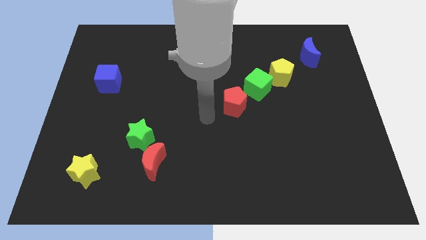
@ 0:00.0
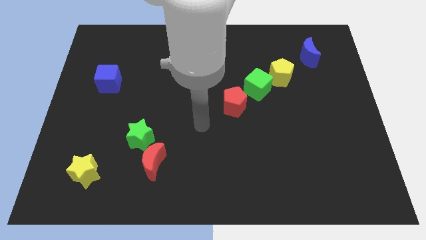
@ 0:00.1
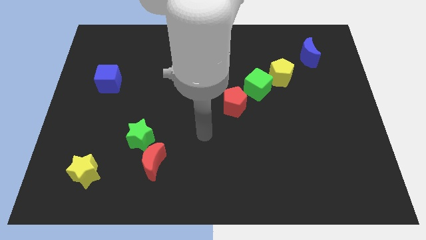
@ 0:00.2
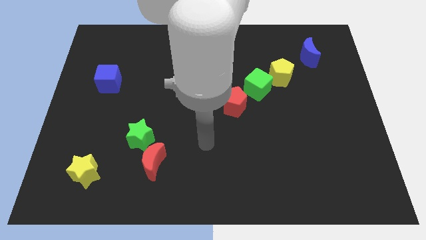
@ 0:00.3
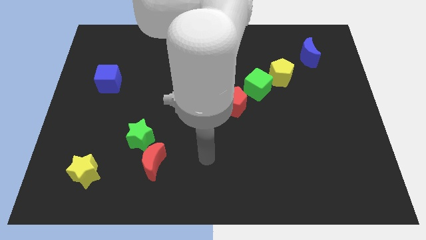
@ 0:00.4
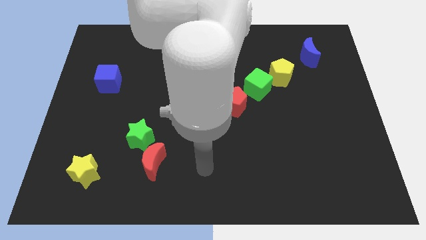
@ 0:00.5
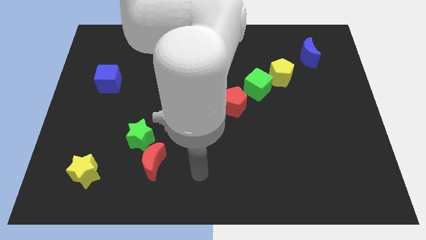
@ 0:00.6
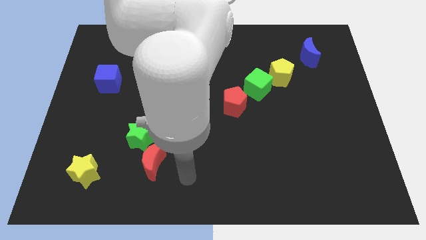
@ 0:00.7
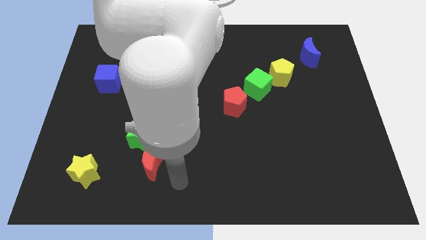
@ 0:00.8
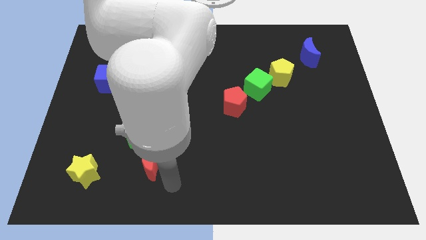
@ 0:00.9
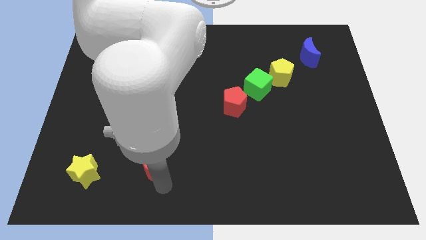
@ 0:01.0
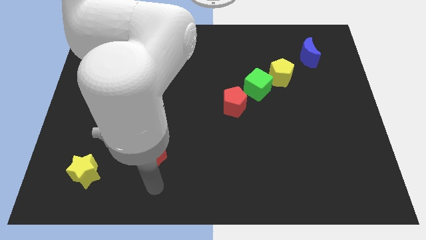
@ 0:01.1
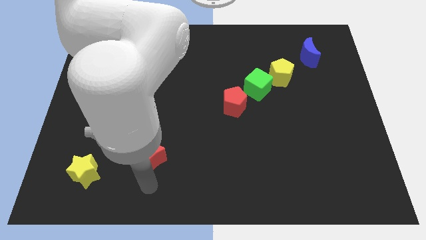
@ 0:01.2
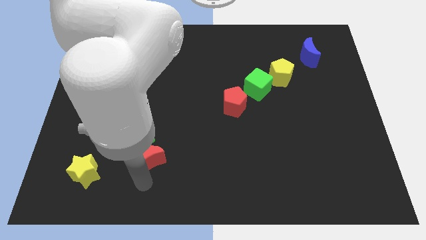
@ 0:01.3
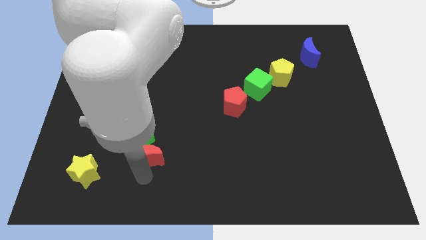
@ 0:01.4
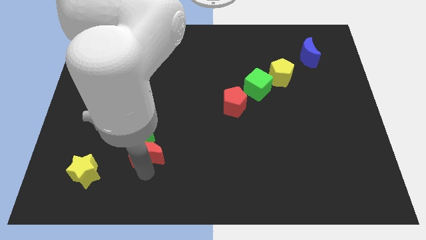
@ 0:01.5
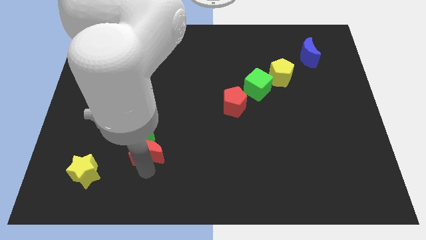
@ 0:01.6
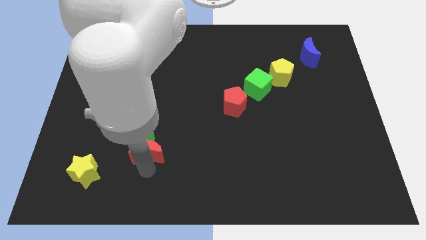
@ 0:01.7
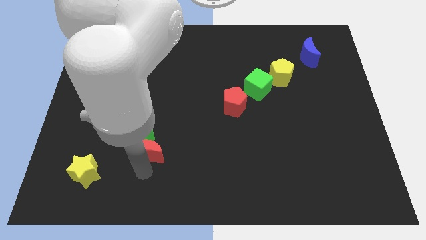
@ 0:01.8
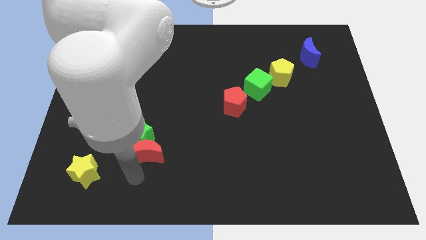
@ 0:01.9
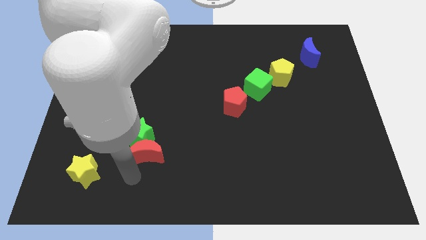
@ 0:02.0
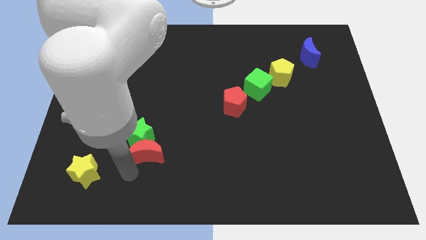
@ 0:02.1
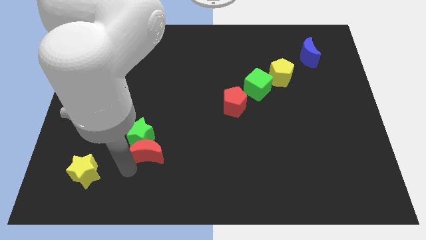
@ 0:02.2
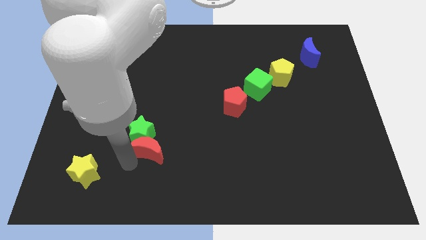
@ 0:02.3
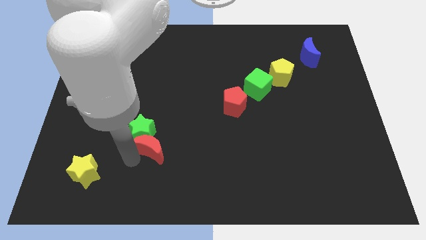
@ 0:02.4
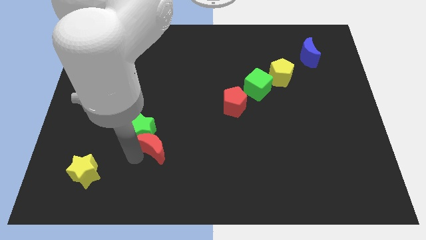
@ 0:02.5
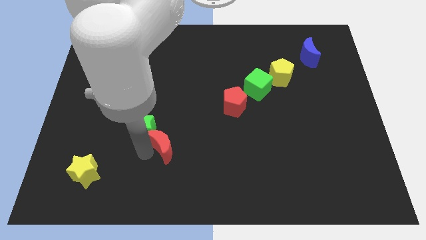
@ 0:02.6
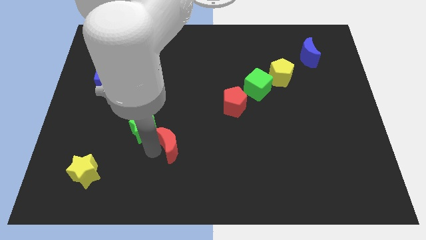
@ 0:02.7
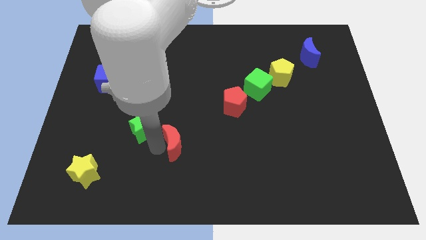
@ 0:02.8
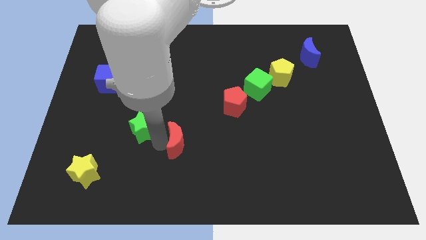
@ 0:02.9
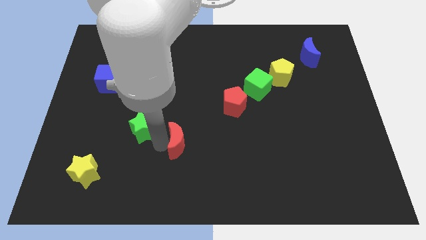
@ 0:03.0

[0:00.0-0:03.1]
separate the red moon from the green star

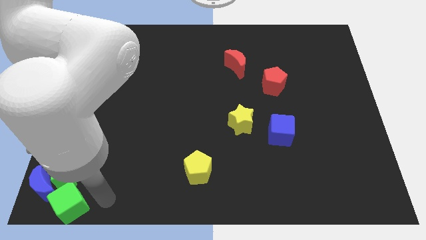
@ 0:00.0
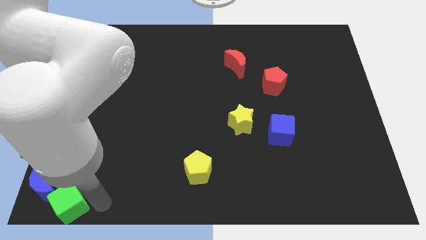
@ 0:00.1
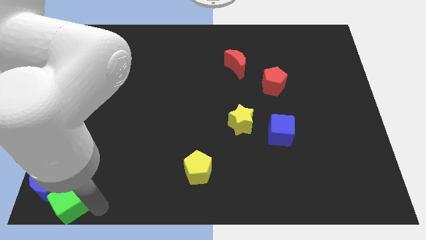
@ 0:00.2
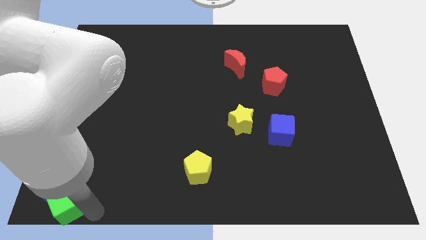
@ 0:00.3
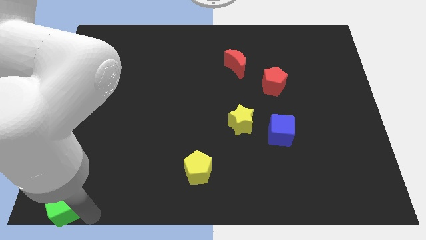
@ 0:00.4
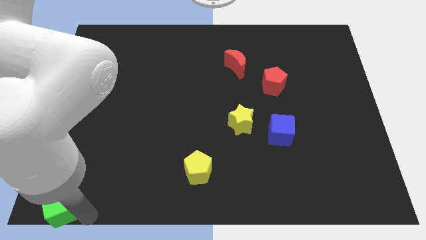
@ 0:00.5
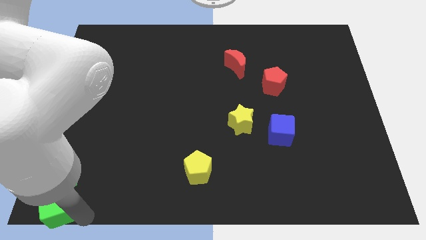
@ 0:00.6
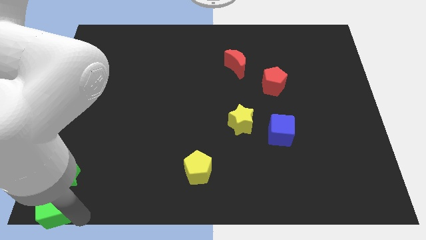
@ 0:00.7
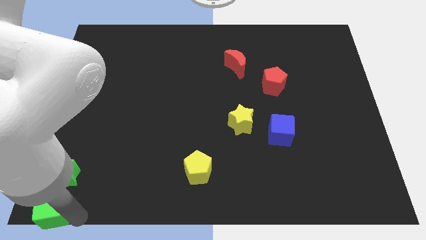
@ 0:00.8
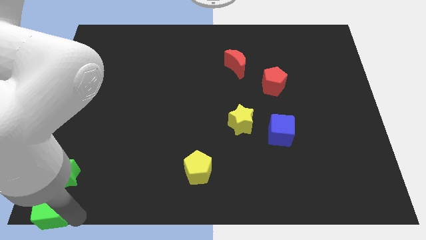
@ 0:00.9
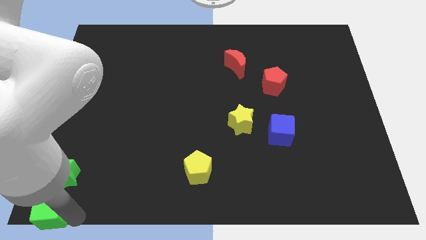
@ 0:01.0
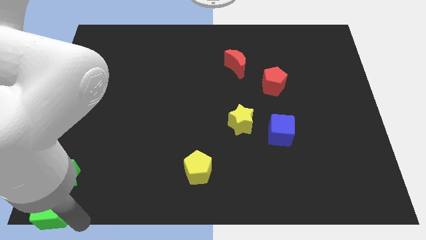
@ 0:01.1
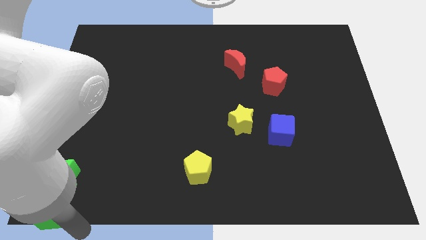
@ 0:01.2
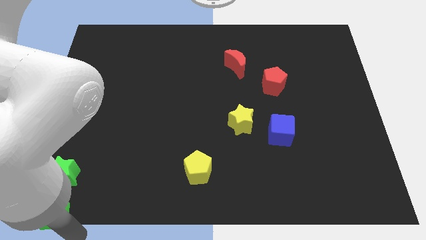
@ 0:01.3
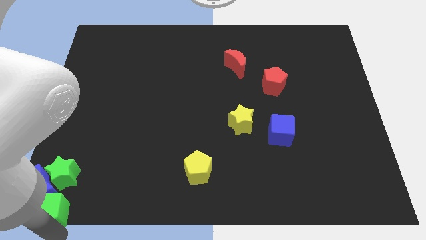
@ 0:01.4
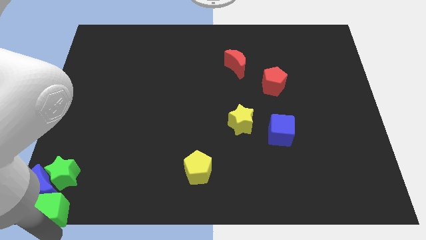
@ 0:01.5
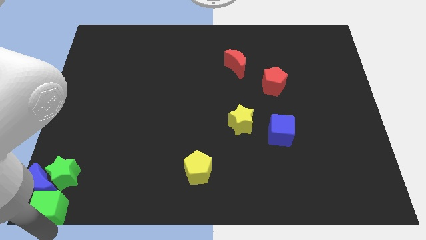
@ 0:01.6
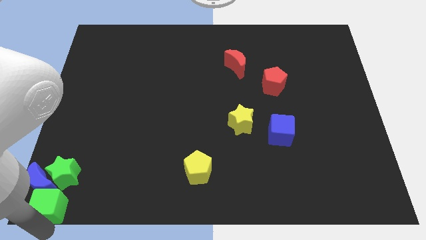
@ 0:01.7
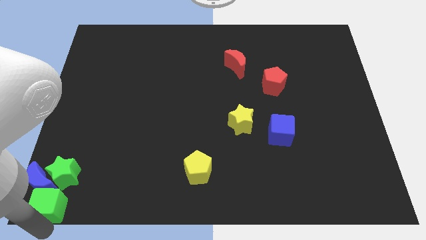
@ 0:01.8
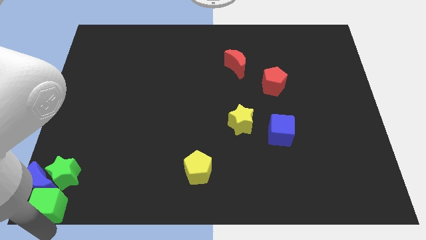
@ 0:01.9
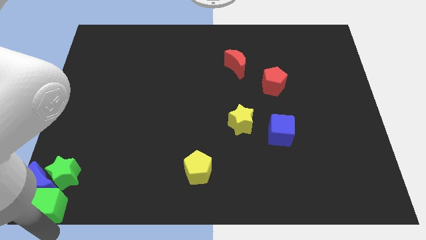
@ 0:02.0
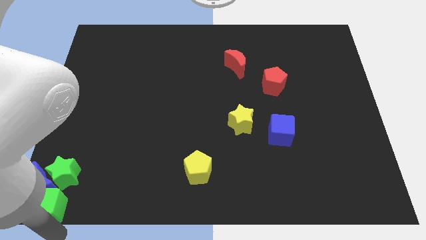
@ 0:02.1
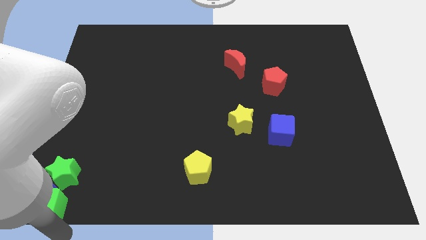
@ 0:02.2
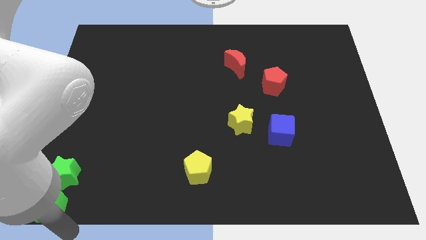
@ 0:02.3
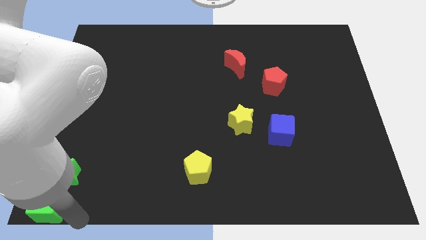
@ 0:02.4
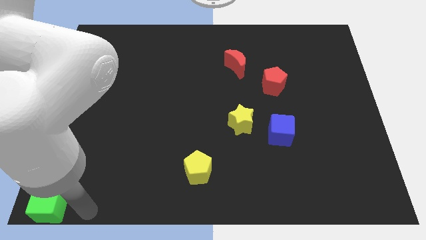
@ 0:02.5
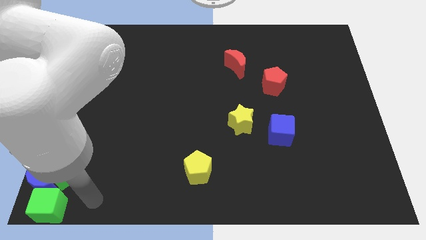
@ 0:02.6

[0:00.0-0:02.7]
put the green cube at the bottom left corner of the board

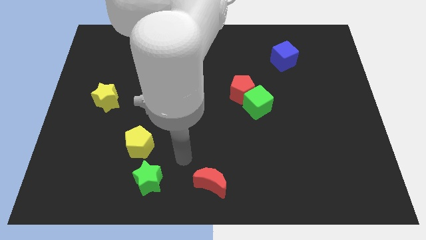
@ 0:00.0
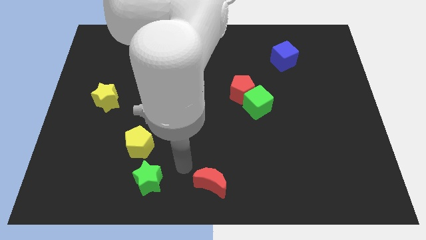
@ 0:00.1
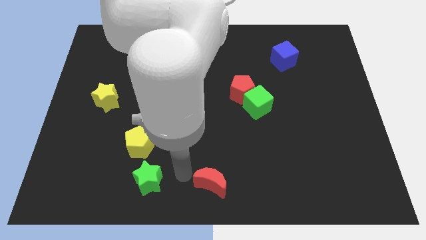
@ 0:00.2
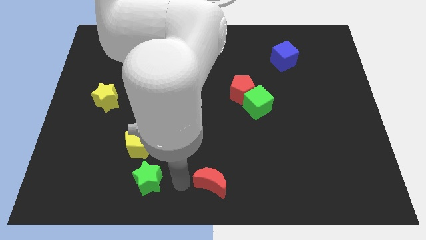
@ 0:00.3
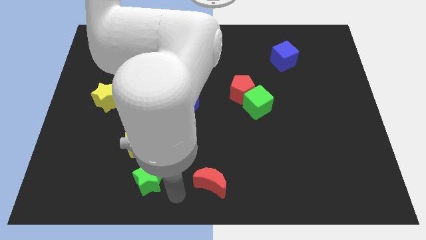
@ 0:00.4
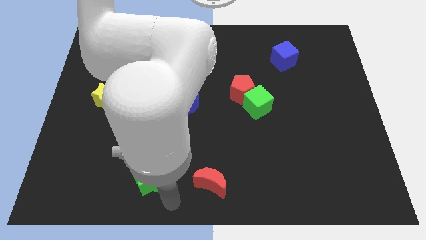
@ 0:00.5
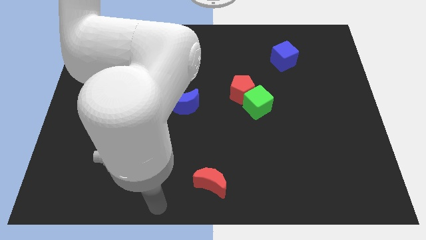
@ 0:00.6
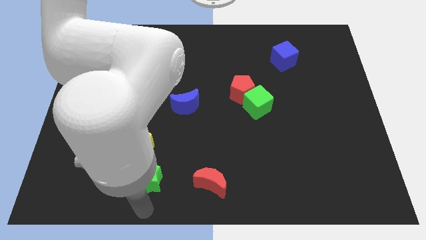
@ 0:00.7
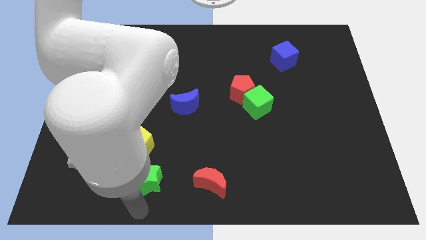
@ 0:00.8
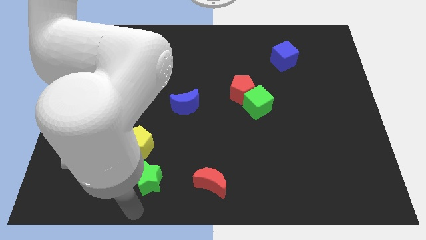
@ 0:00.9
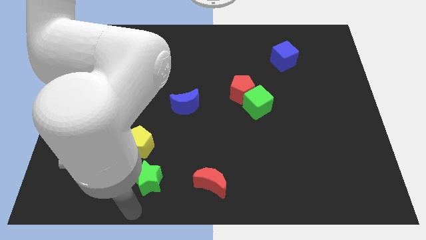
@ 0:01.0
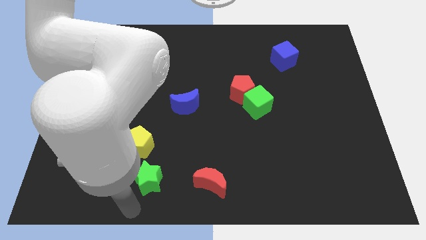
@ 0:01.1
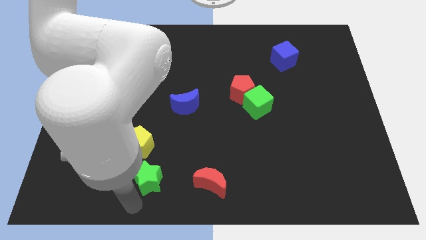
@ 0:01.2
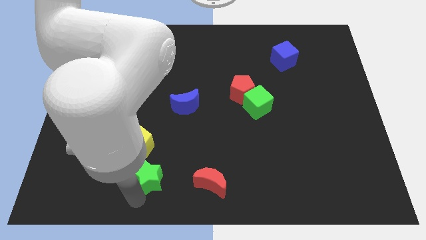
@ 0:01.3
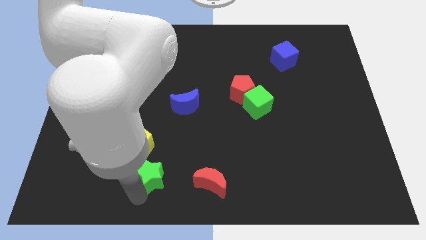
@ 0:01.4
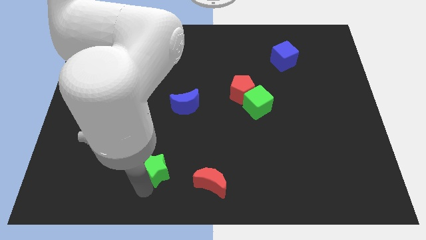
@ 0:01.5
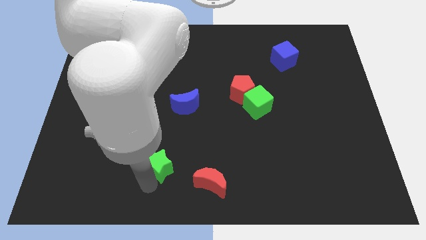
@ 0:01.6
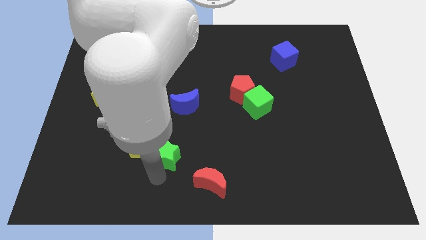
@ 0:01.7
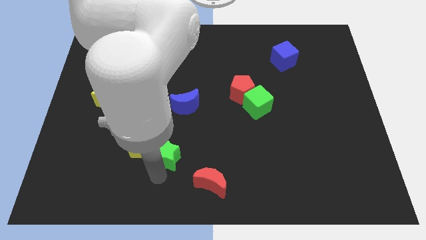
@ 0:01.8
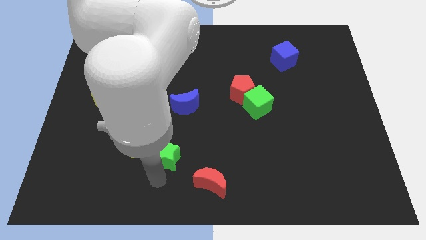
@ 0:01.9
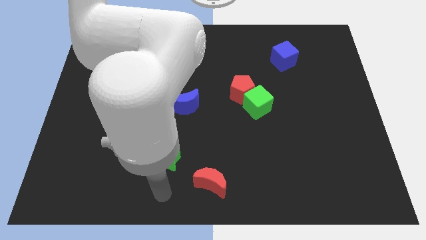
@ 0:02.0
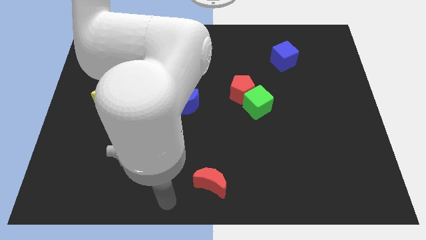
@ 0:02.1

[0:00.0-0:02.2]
move the green star slightly to the top

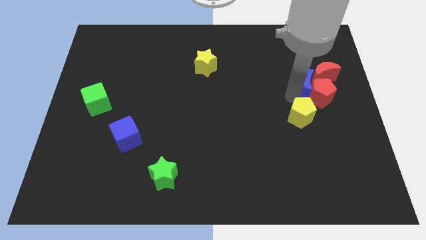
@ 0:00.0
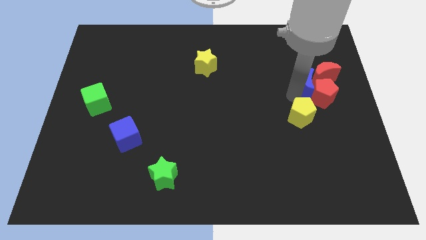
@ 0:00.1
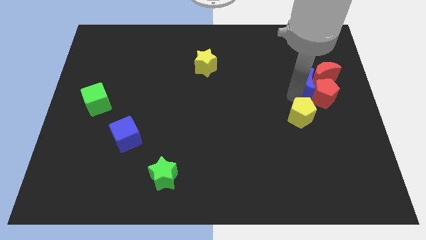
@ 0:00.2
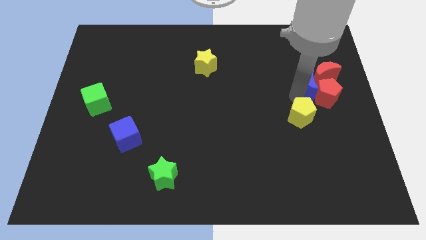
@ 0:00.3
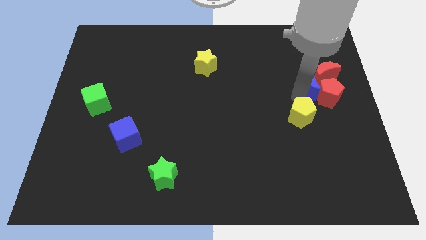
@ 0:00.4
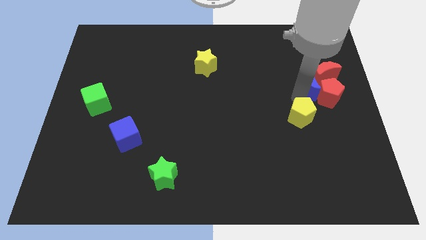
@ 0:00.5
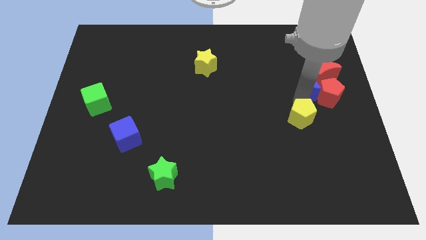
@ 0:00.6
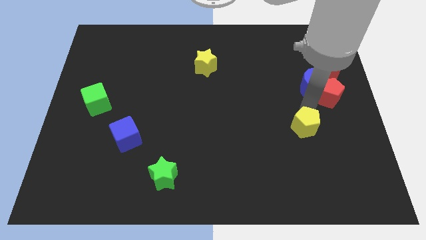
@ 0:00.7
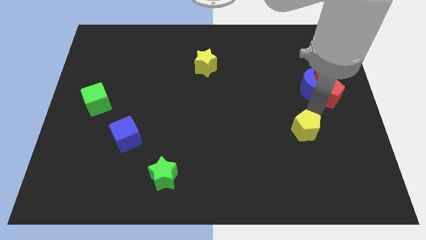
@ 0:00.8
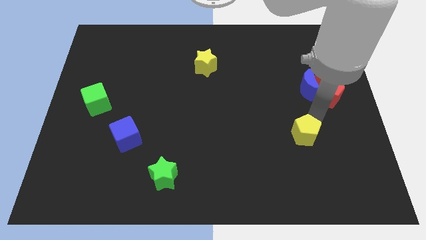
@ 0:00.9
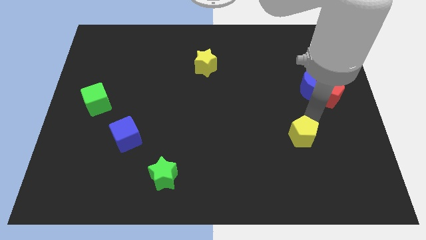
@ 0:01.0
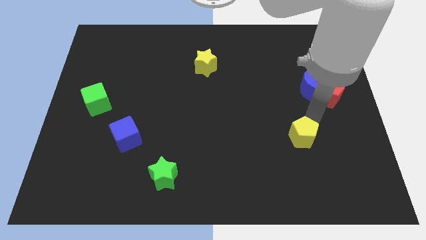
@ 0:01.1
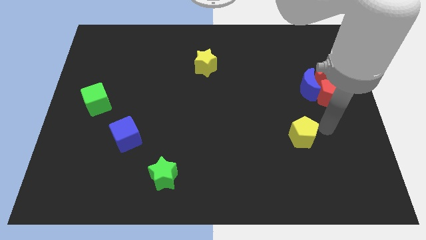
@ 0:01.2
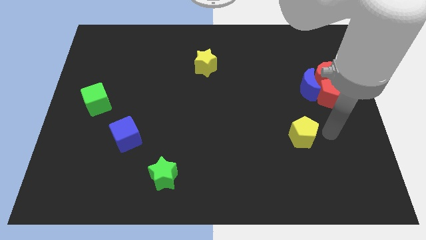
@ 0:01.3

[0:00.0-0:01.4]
seperate yellow pentagon from blue moon
